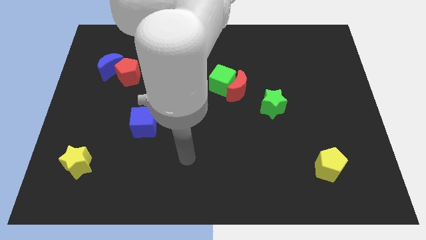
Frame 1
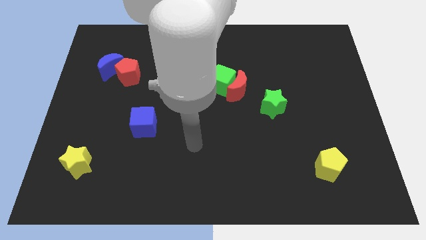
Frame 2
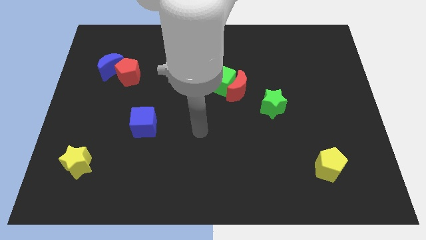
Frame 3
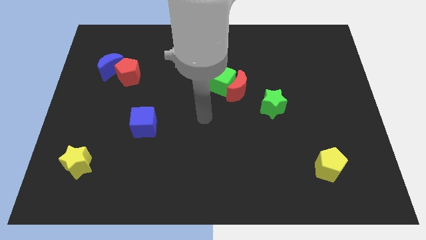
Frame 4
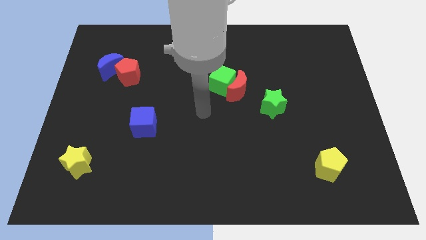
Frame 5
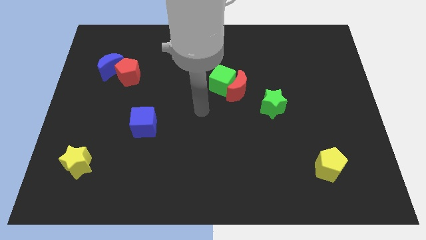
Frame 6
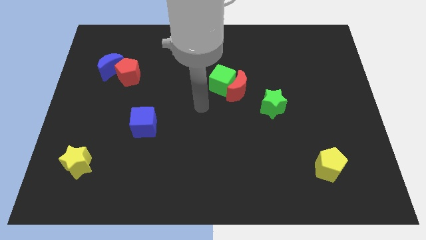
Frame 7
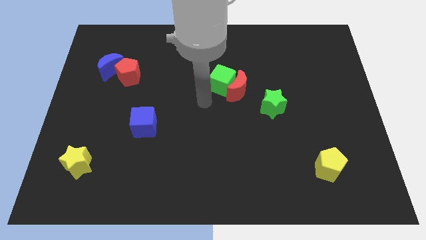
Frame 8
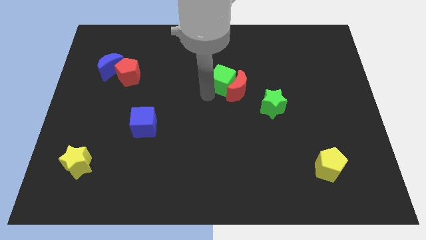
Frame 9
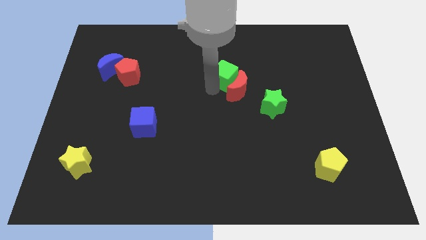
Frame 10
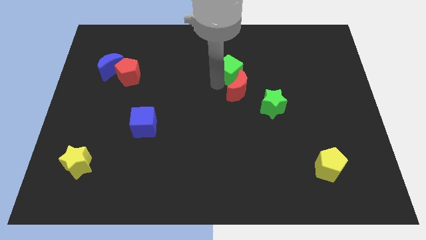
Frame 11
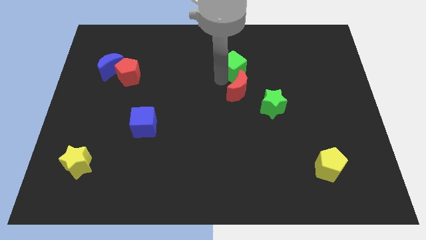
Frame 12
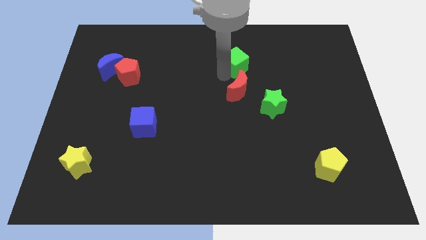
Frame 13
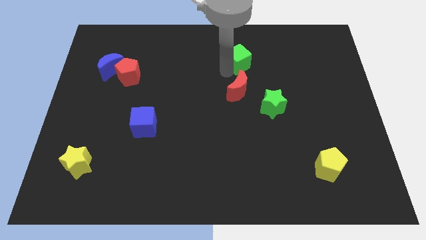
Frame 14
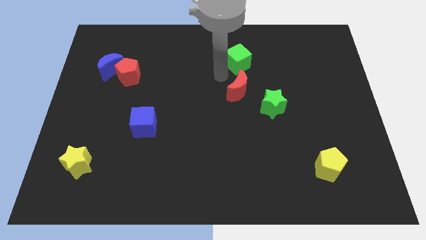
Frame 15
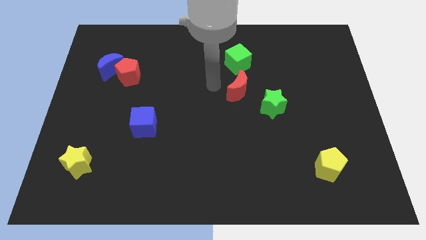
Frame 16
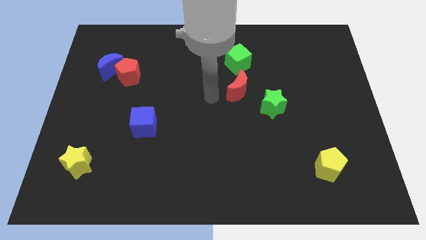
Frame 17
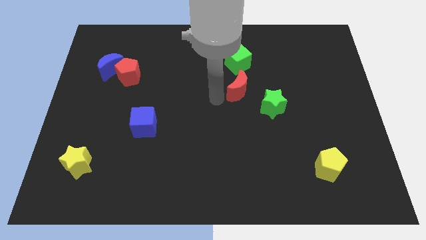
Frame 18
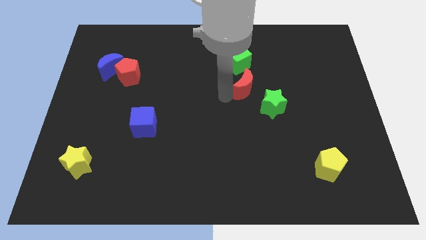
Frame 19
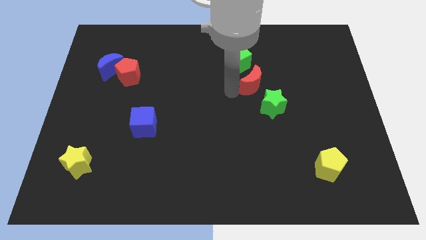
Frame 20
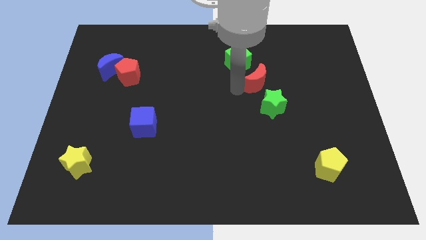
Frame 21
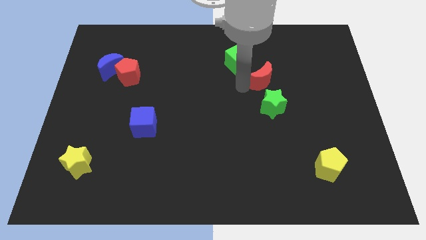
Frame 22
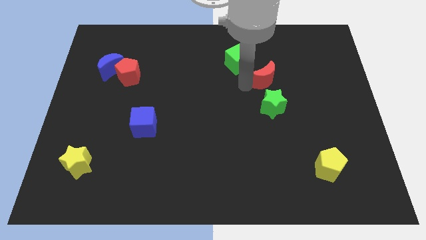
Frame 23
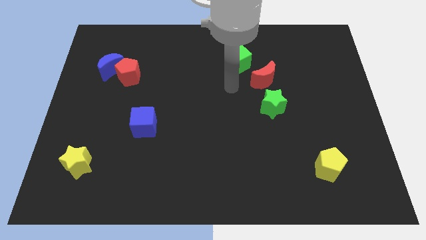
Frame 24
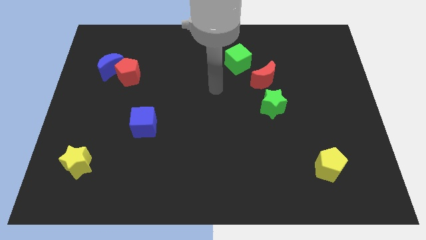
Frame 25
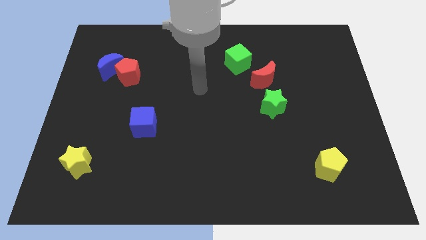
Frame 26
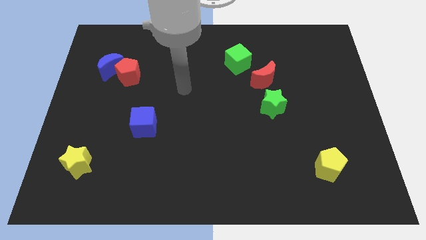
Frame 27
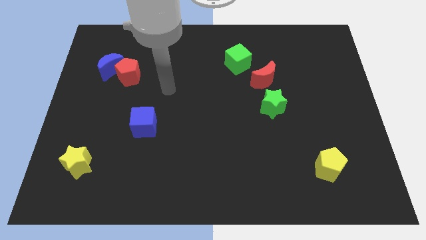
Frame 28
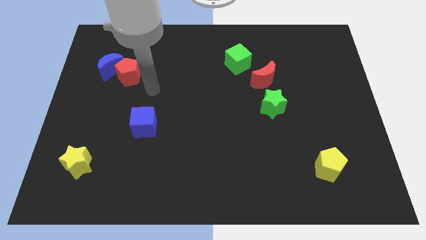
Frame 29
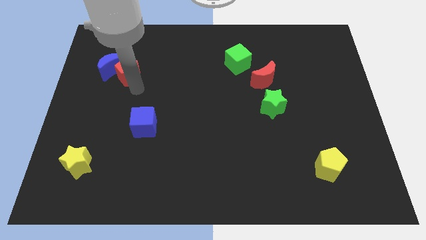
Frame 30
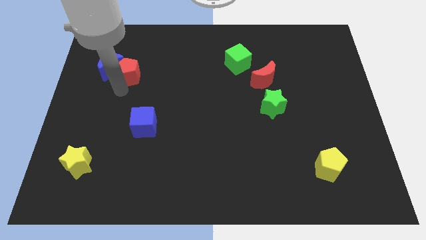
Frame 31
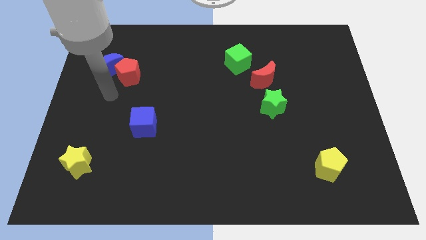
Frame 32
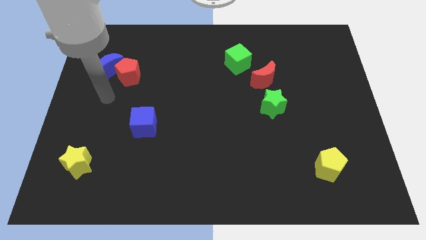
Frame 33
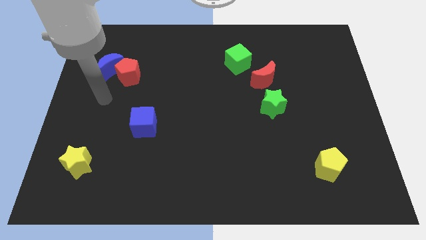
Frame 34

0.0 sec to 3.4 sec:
separate green cube from red moon

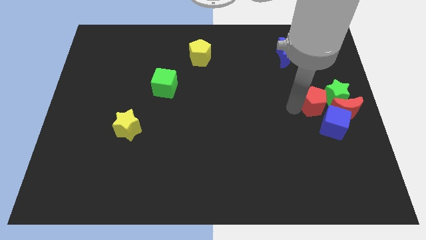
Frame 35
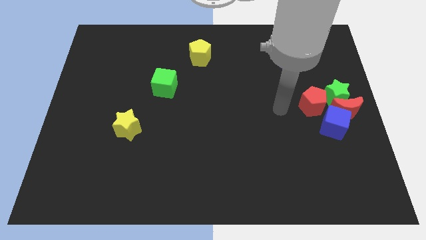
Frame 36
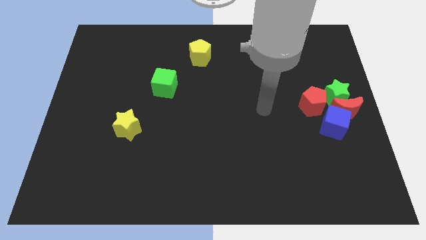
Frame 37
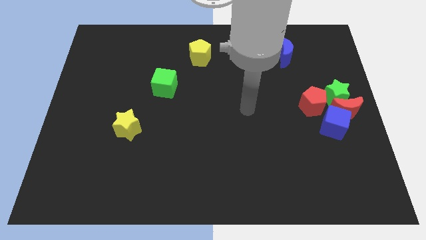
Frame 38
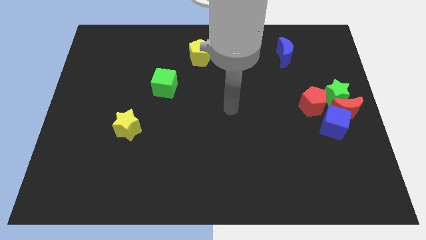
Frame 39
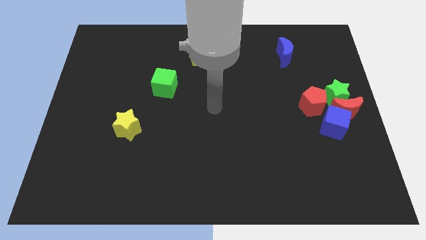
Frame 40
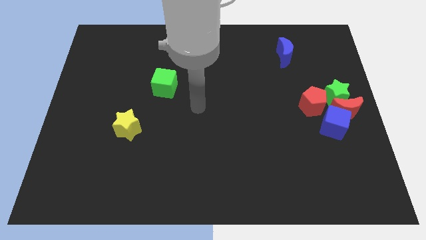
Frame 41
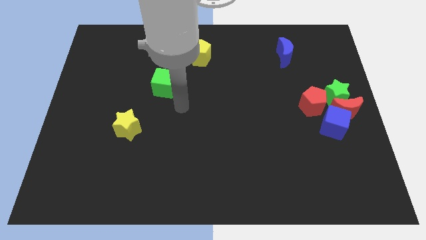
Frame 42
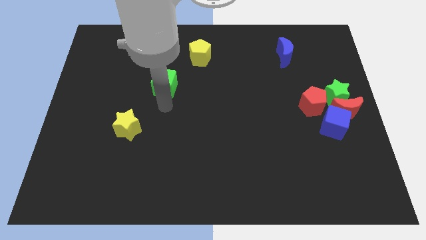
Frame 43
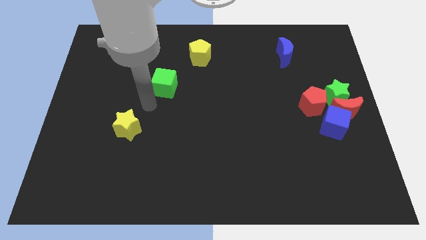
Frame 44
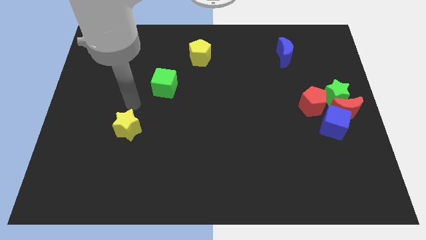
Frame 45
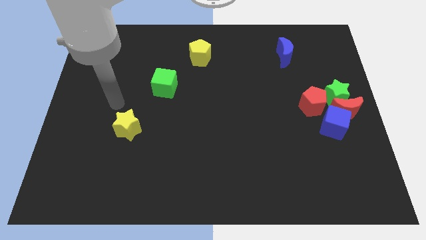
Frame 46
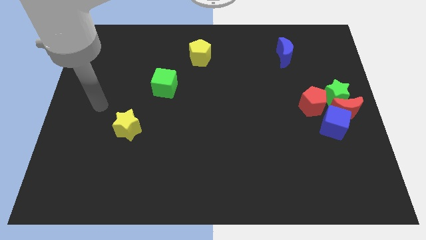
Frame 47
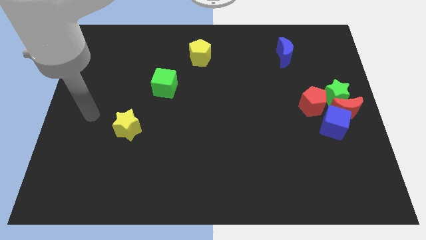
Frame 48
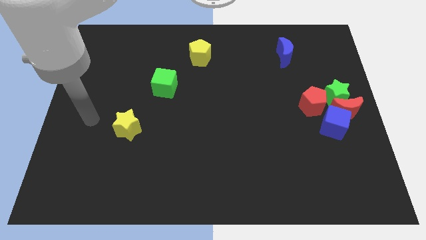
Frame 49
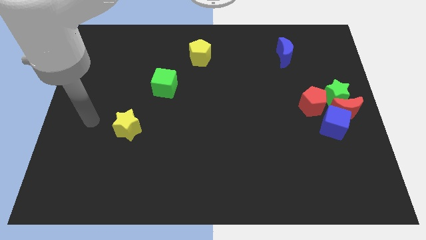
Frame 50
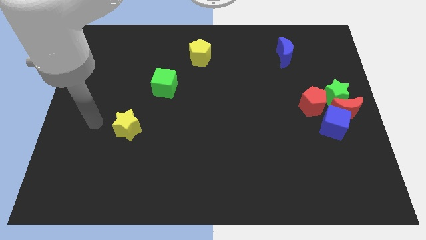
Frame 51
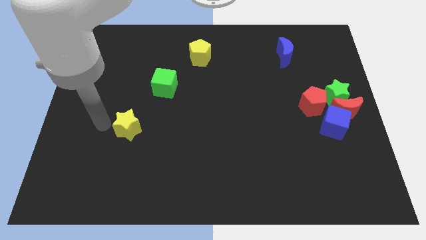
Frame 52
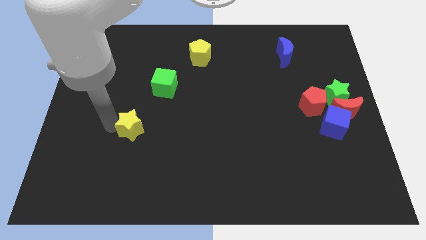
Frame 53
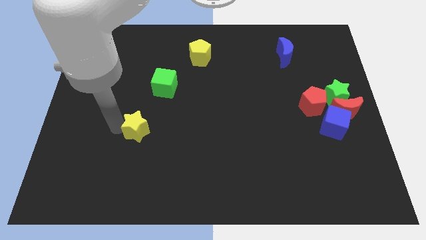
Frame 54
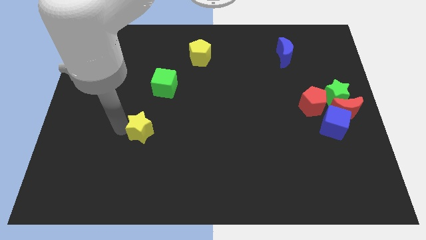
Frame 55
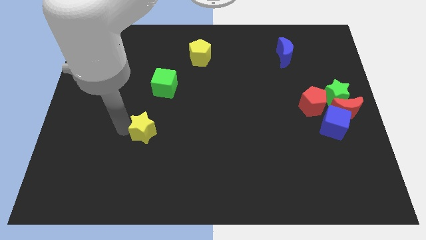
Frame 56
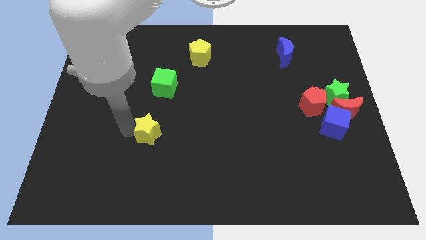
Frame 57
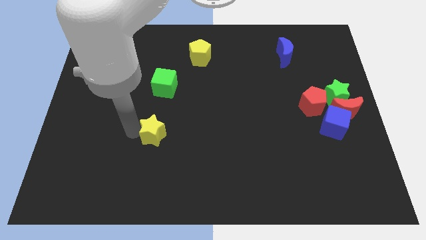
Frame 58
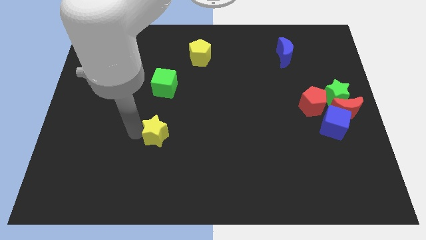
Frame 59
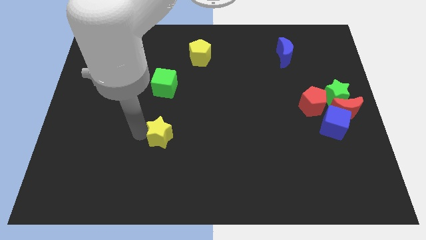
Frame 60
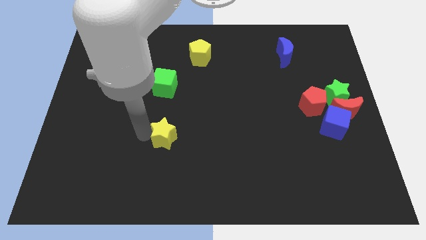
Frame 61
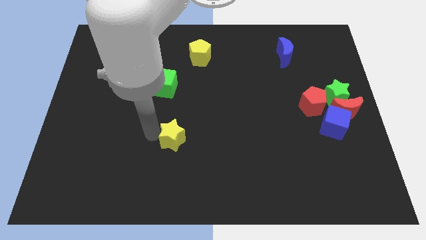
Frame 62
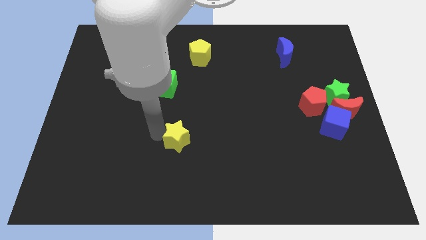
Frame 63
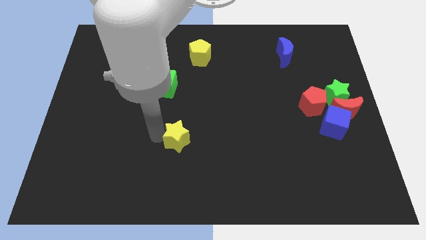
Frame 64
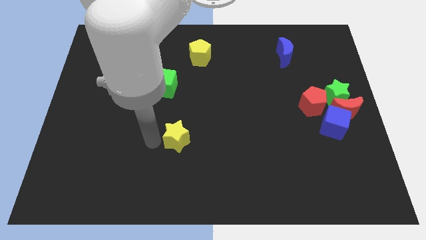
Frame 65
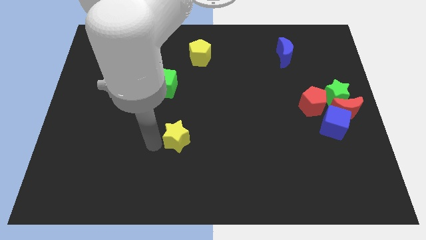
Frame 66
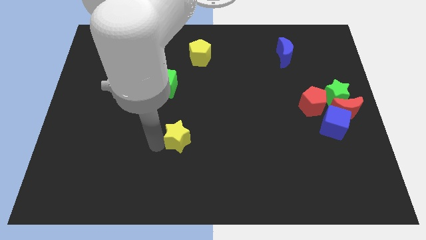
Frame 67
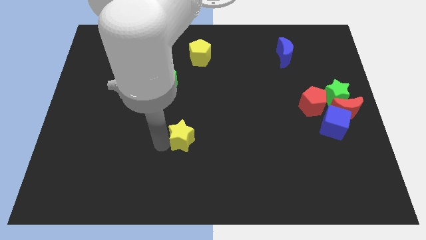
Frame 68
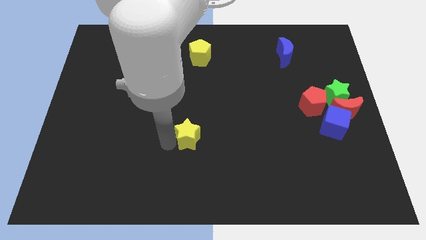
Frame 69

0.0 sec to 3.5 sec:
push the yellow star to the bottom right of the green cube

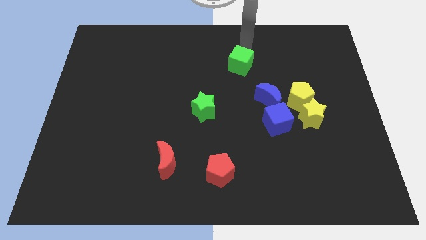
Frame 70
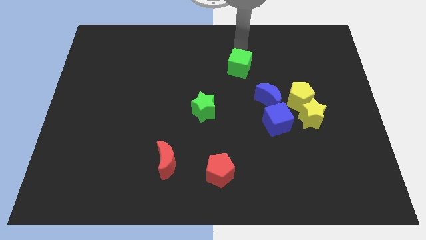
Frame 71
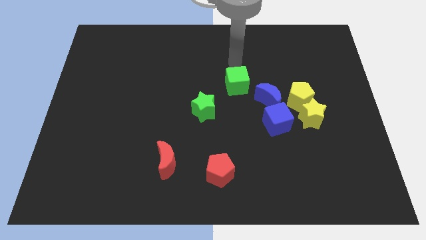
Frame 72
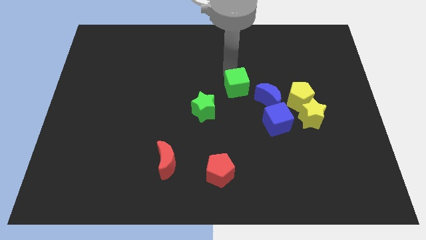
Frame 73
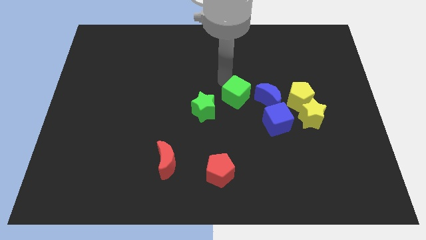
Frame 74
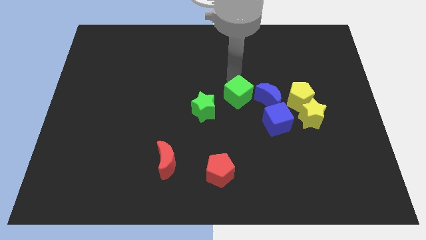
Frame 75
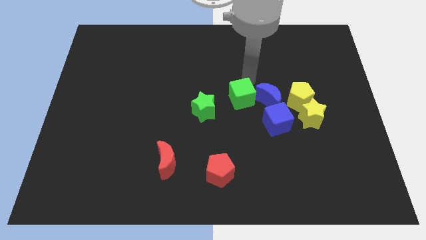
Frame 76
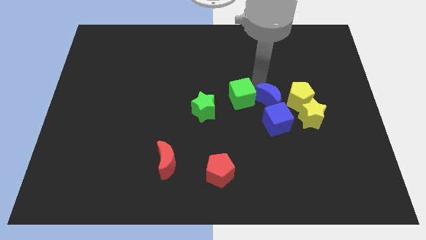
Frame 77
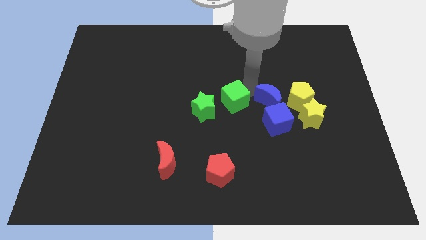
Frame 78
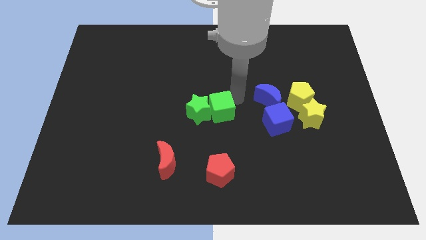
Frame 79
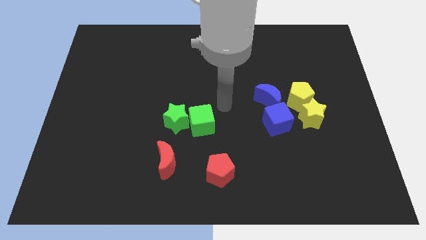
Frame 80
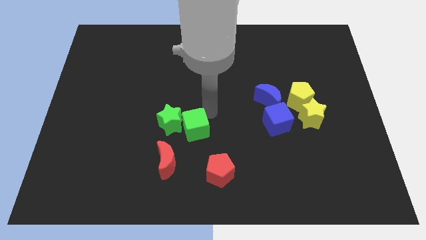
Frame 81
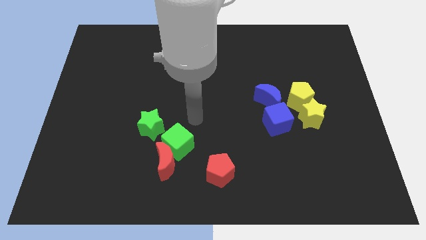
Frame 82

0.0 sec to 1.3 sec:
push the green cube towards the green star

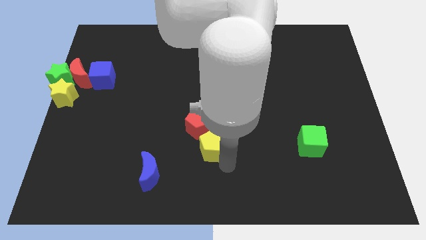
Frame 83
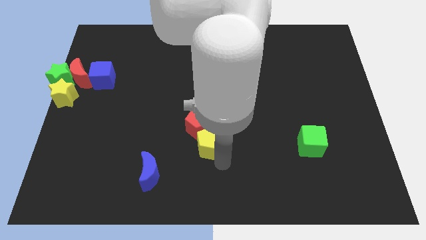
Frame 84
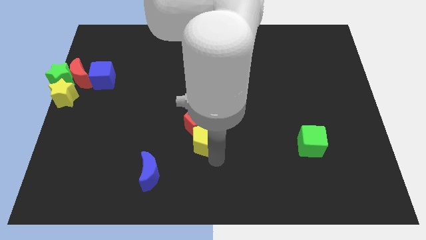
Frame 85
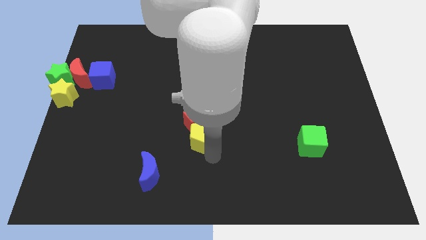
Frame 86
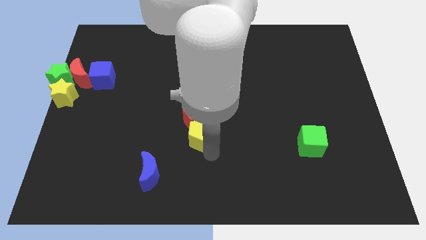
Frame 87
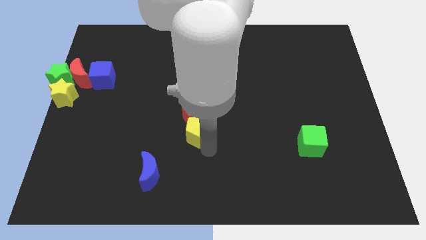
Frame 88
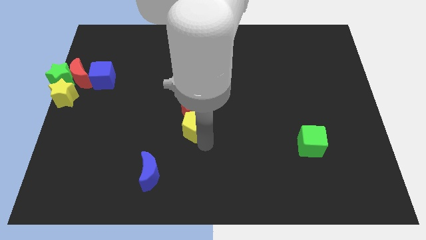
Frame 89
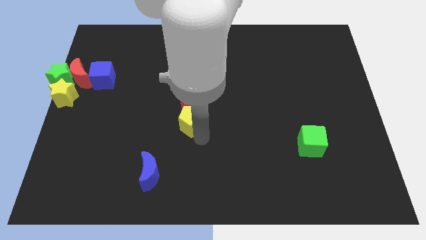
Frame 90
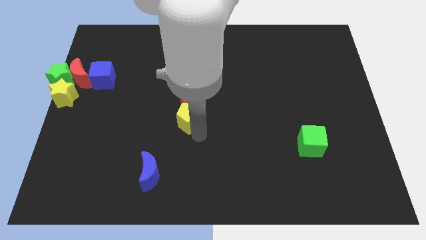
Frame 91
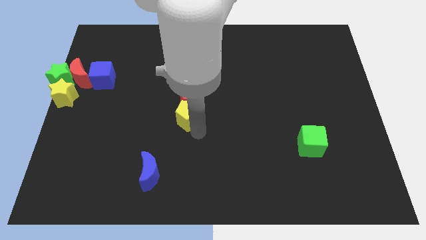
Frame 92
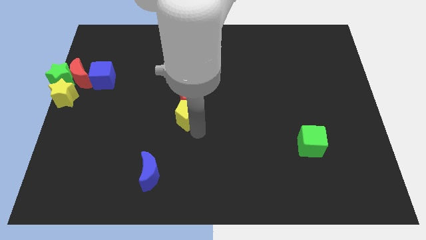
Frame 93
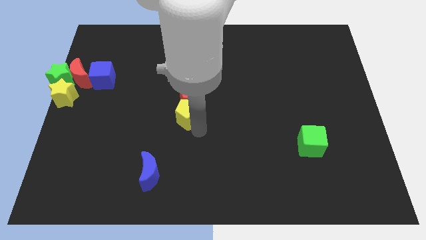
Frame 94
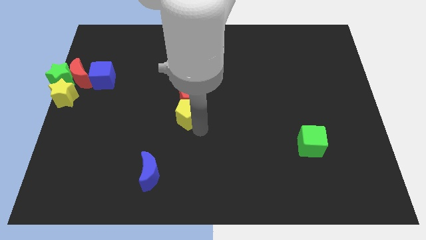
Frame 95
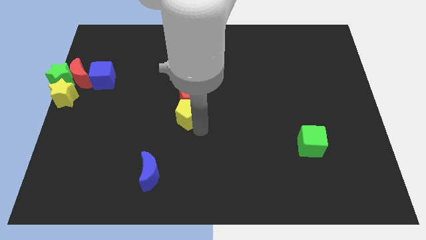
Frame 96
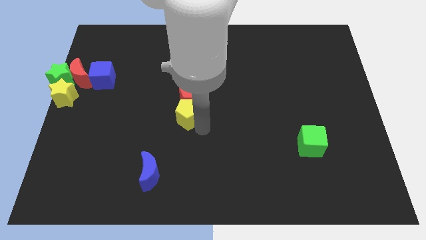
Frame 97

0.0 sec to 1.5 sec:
push the red pentagon and yellow pentagon towards the center
